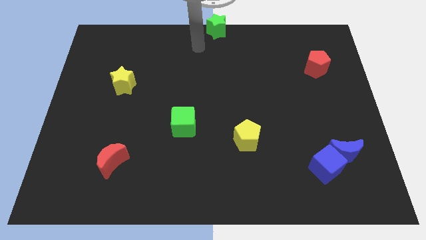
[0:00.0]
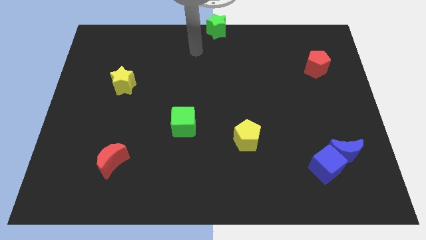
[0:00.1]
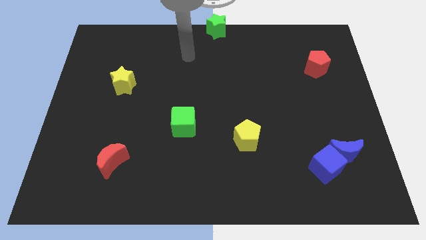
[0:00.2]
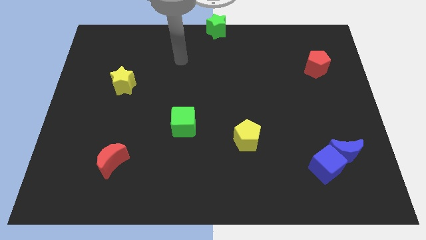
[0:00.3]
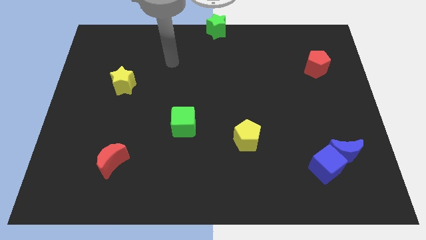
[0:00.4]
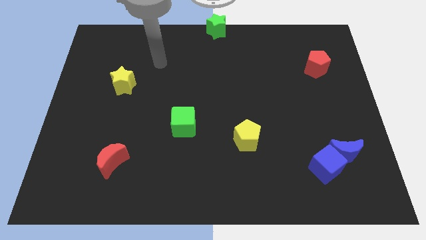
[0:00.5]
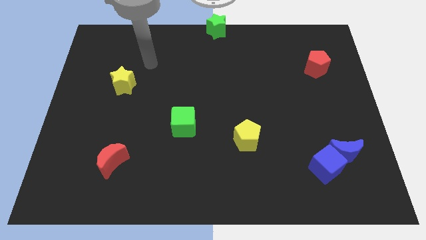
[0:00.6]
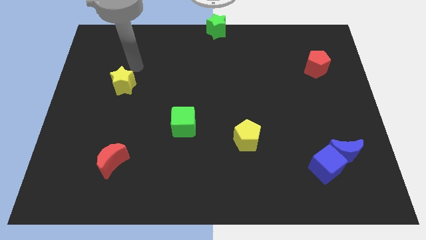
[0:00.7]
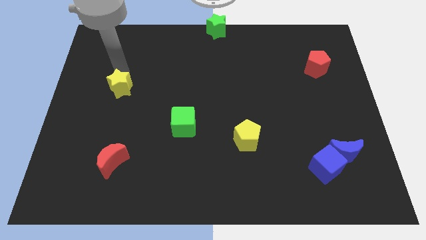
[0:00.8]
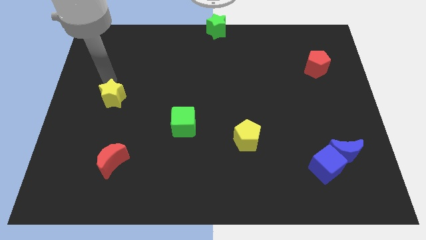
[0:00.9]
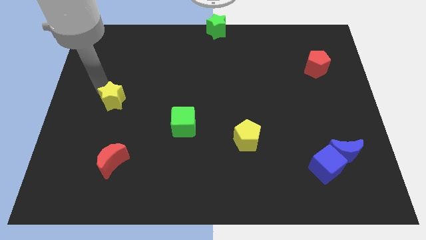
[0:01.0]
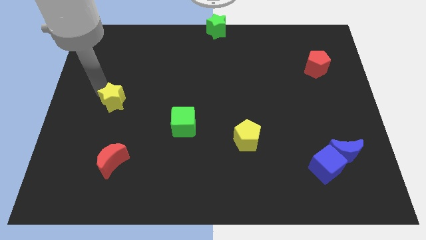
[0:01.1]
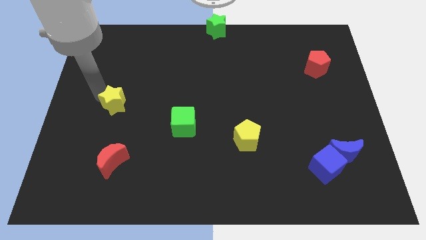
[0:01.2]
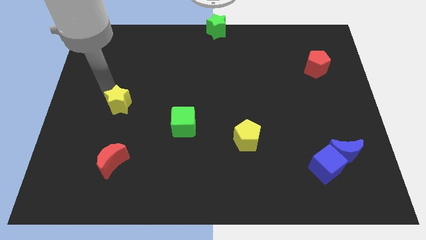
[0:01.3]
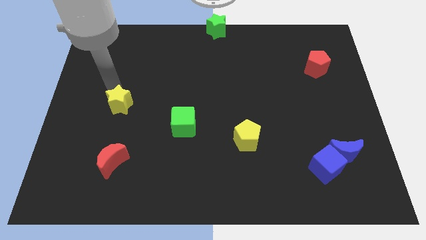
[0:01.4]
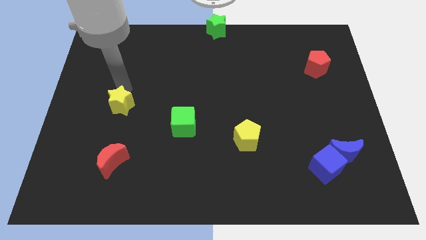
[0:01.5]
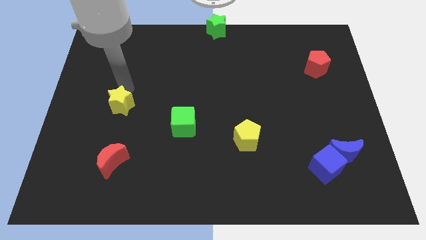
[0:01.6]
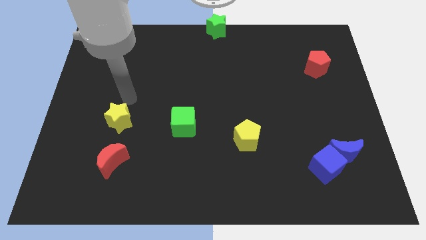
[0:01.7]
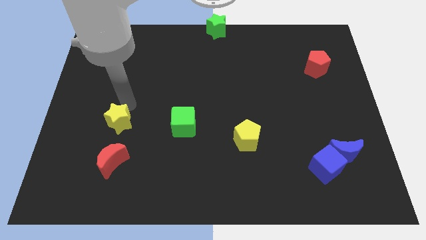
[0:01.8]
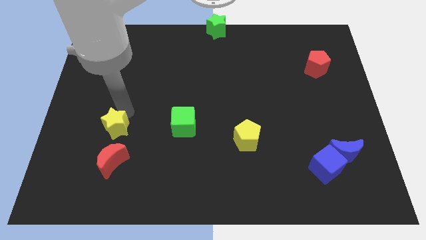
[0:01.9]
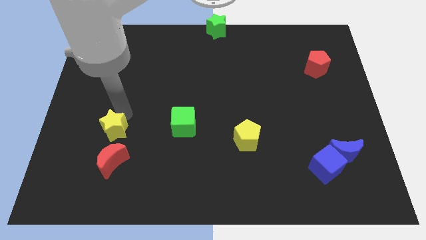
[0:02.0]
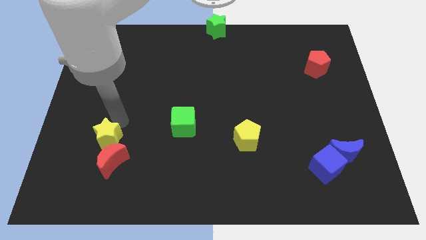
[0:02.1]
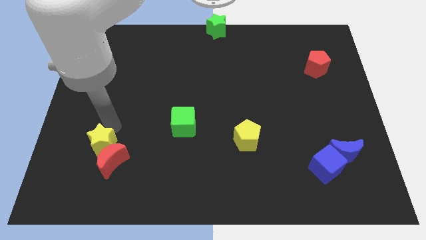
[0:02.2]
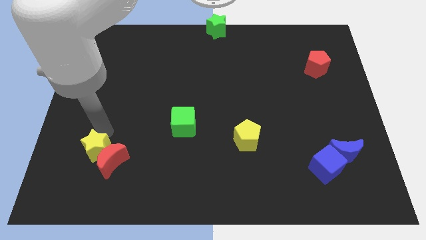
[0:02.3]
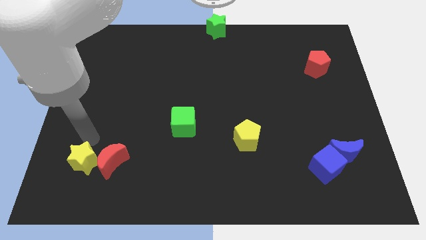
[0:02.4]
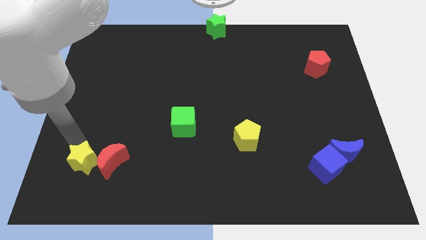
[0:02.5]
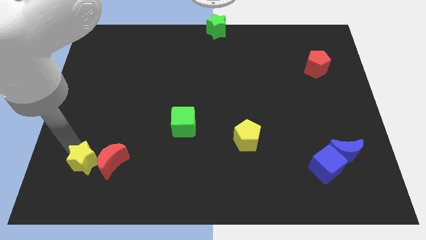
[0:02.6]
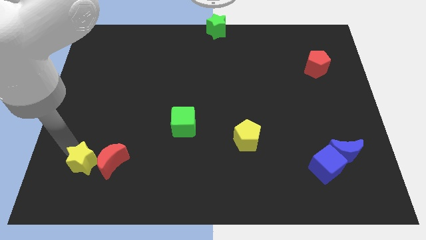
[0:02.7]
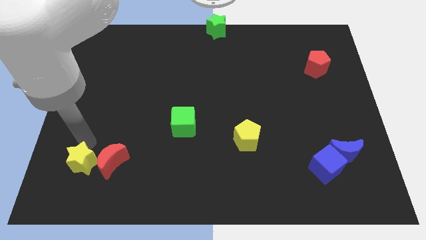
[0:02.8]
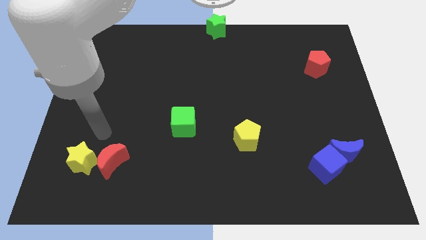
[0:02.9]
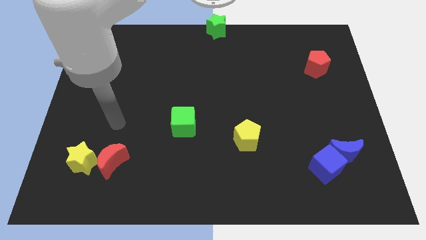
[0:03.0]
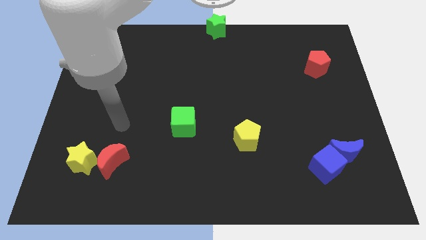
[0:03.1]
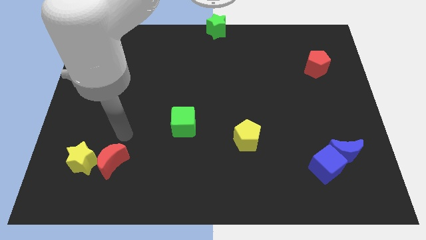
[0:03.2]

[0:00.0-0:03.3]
place the yellow star to the left of the red crescent

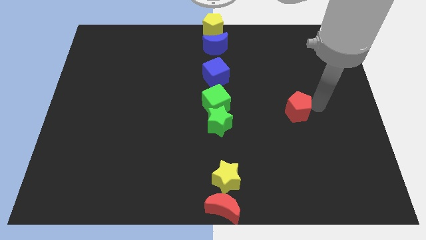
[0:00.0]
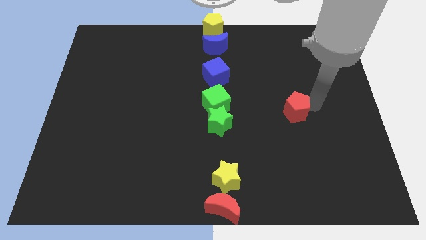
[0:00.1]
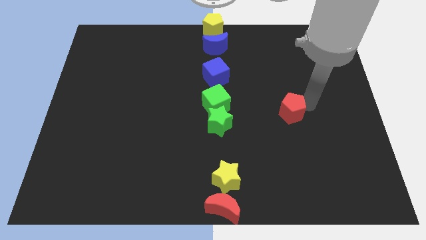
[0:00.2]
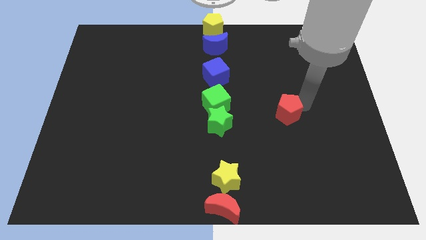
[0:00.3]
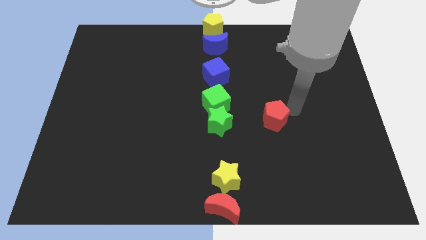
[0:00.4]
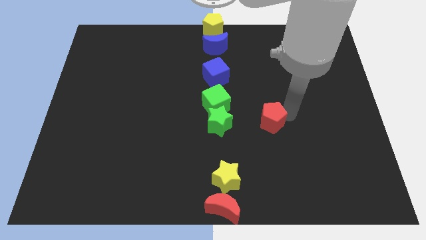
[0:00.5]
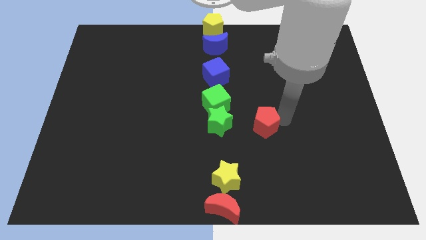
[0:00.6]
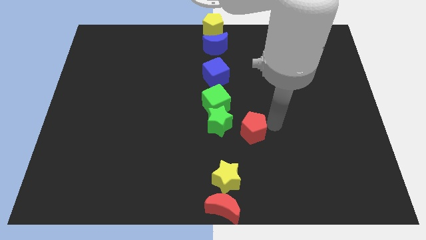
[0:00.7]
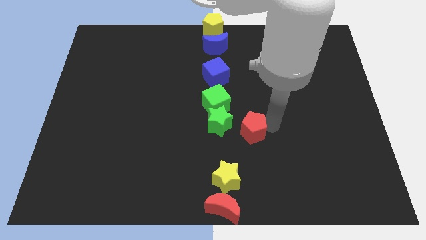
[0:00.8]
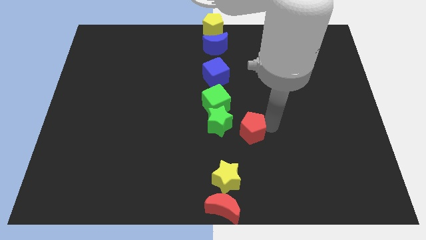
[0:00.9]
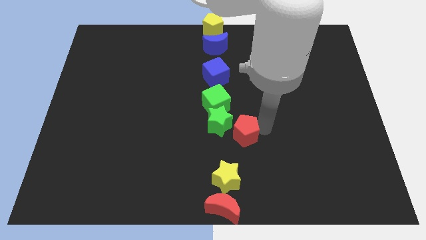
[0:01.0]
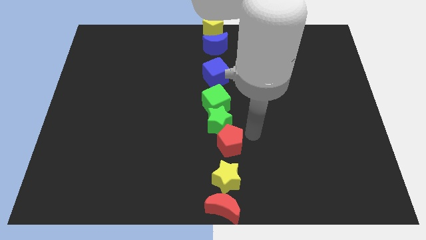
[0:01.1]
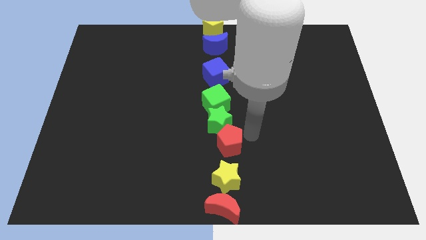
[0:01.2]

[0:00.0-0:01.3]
move the red pentagon on top of the yellow star

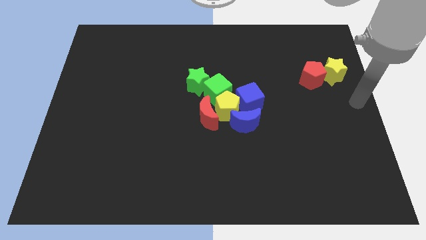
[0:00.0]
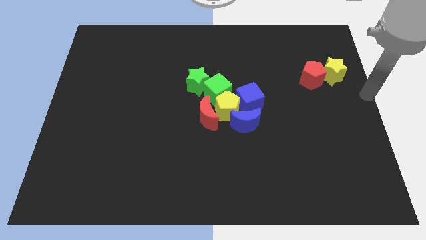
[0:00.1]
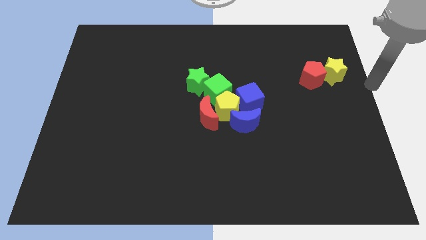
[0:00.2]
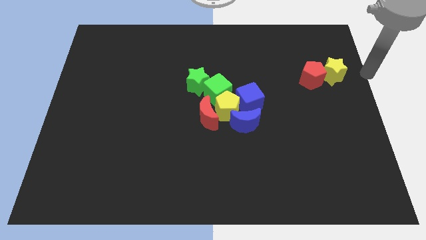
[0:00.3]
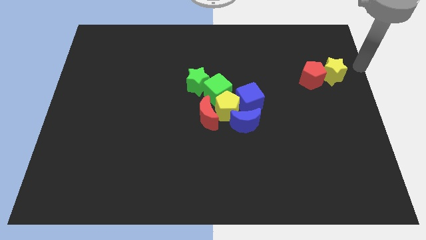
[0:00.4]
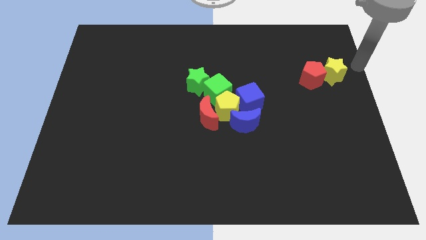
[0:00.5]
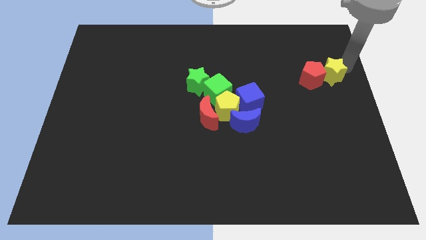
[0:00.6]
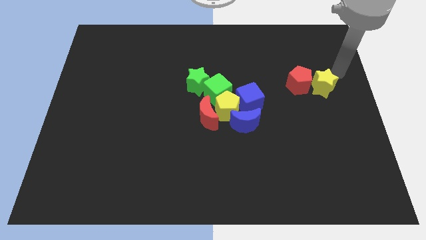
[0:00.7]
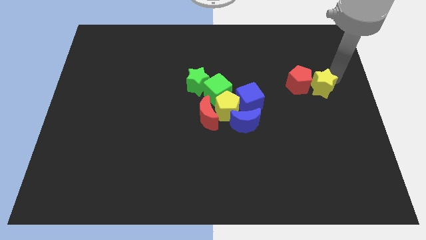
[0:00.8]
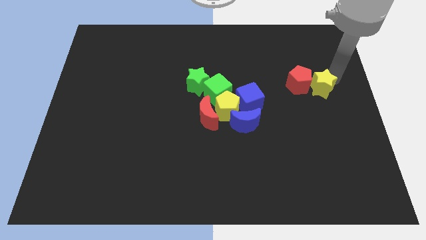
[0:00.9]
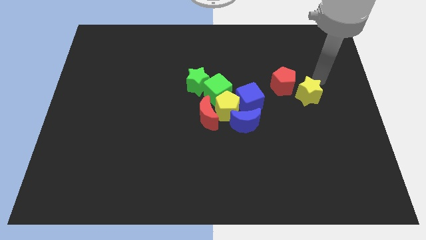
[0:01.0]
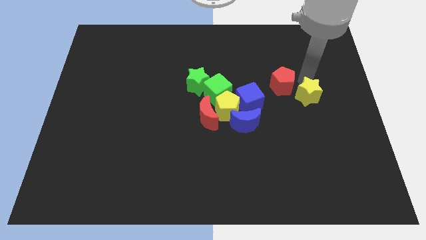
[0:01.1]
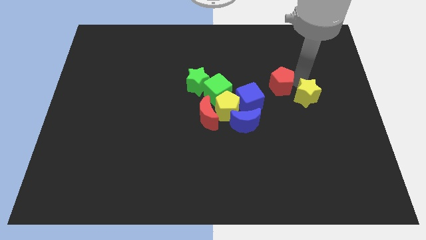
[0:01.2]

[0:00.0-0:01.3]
move yellow star and red pentagon towards the group of blocks

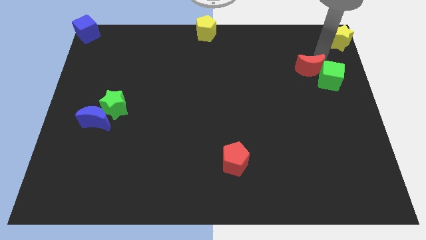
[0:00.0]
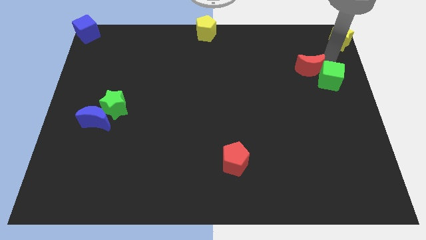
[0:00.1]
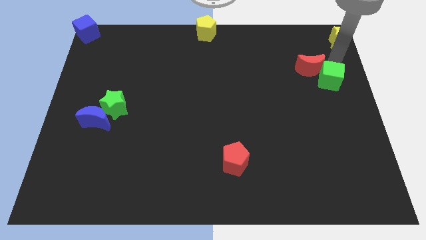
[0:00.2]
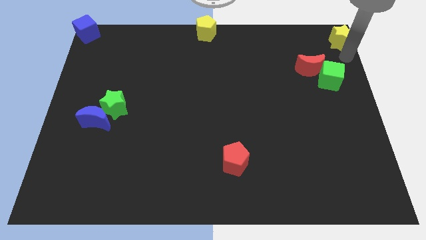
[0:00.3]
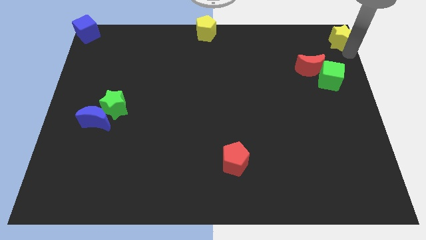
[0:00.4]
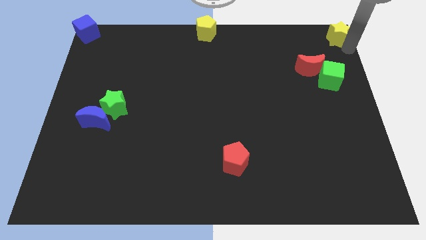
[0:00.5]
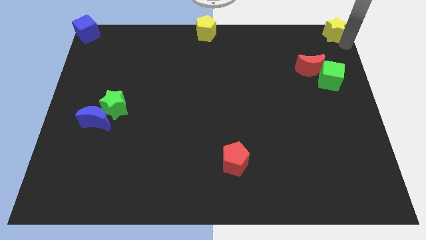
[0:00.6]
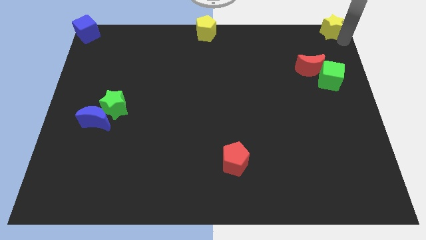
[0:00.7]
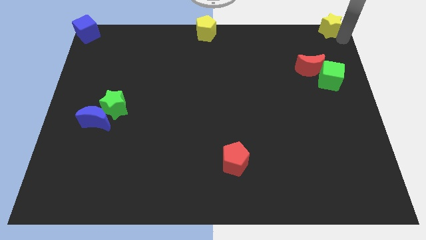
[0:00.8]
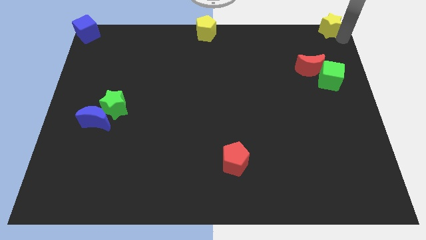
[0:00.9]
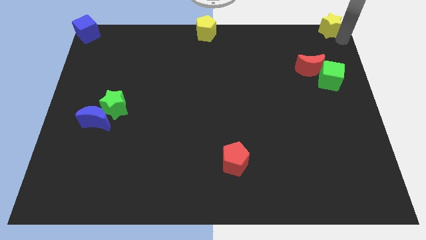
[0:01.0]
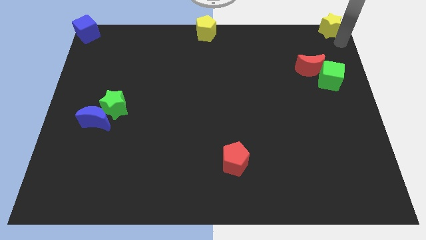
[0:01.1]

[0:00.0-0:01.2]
slide the yellow pentagon up slightly

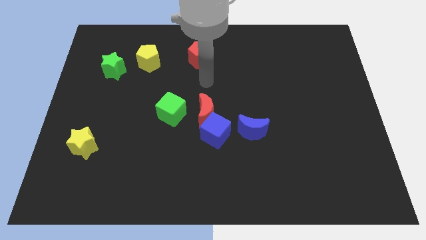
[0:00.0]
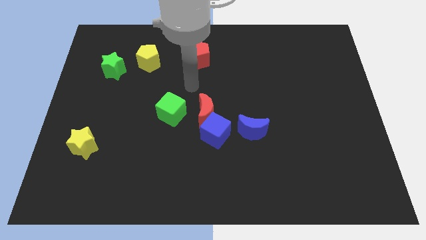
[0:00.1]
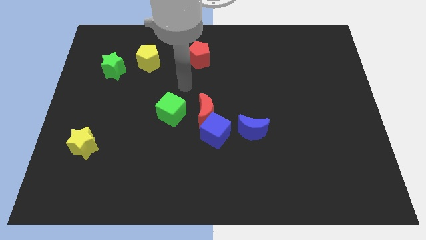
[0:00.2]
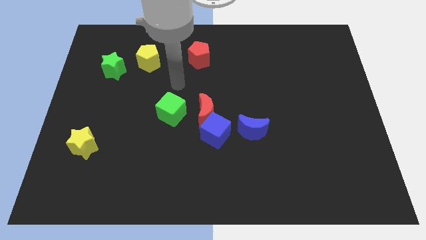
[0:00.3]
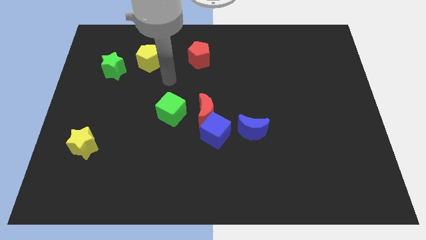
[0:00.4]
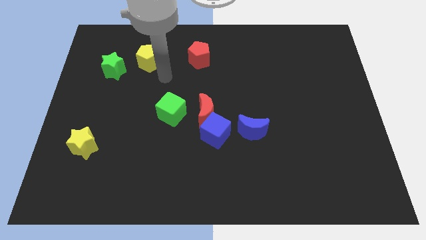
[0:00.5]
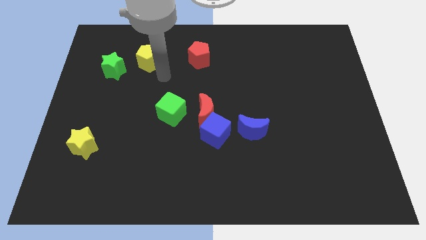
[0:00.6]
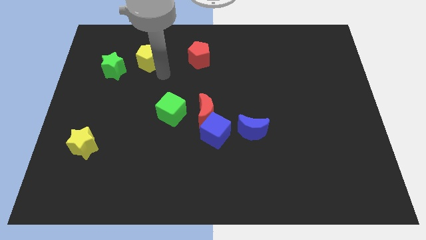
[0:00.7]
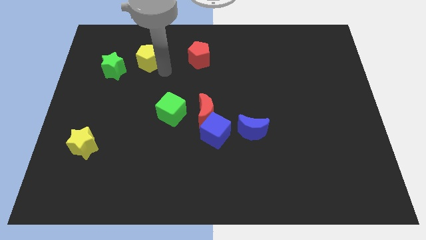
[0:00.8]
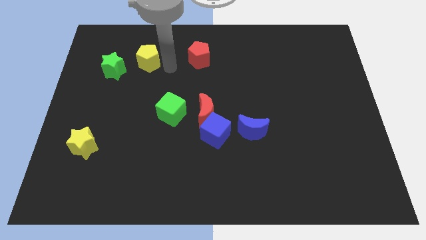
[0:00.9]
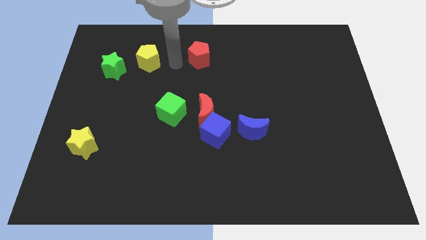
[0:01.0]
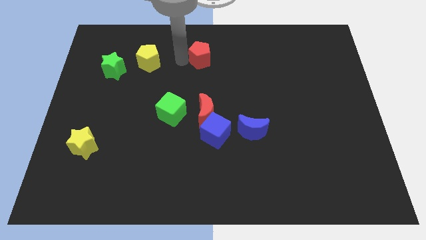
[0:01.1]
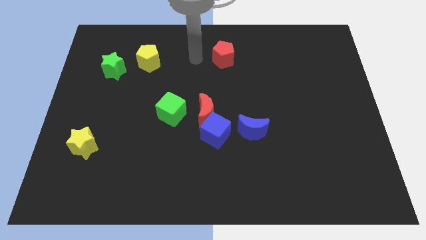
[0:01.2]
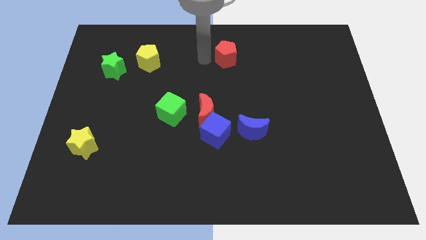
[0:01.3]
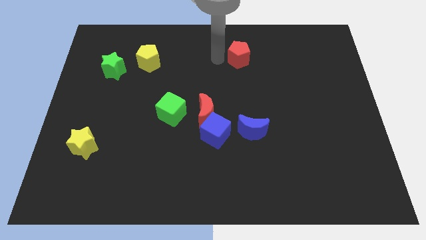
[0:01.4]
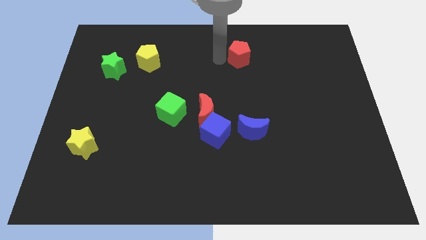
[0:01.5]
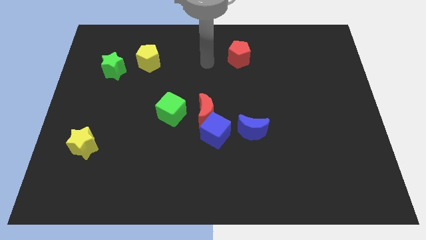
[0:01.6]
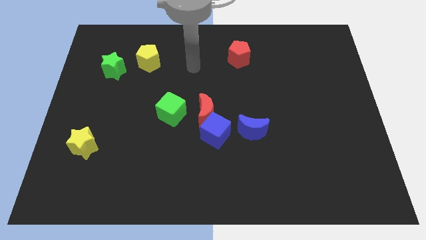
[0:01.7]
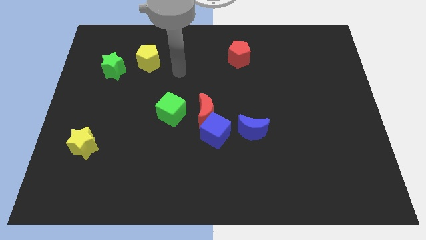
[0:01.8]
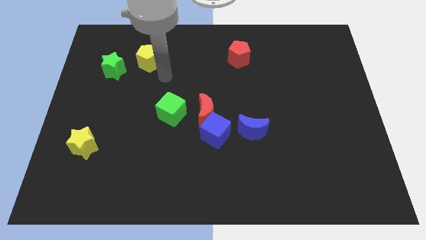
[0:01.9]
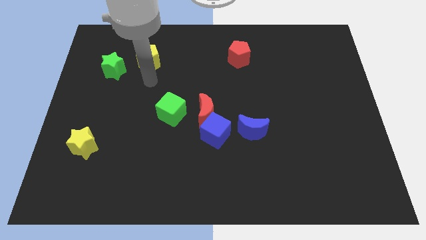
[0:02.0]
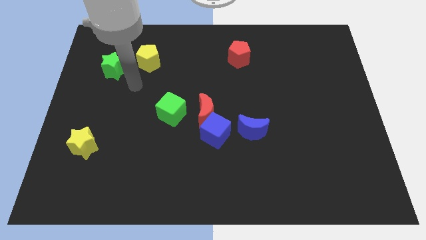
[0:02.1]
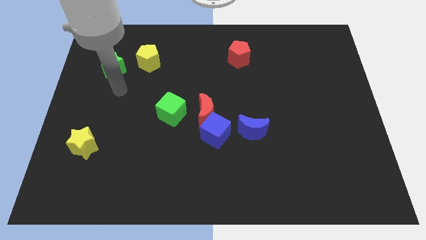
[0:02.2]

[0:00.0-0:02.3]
place the red pentagon above the blue moon
